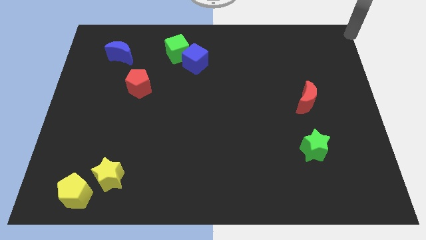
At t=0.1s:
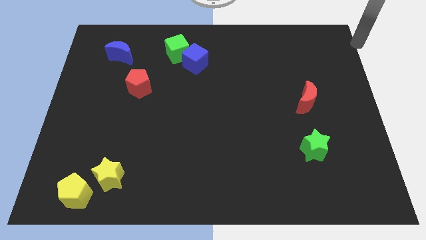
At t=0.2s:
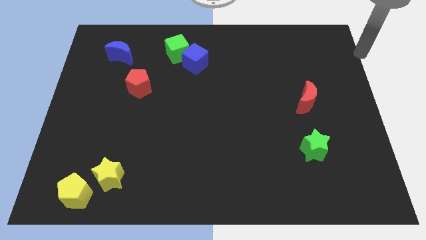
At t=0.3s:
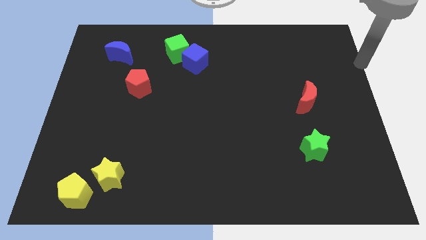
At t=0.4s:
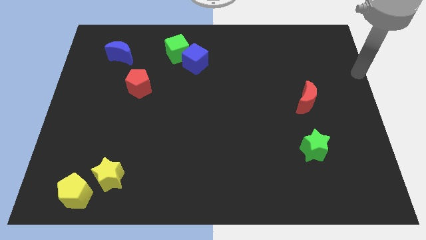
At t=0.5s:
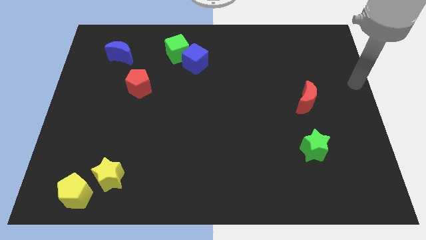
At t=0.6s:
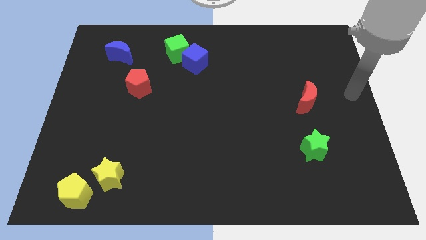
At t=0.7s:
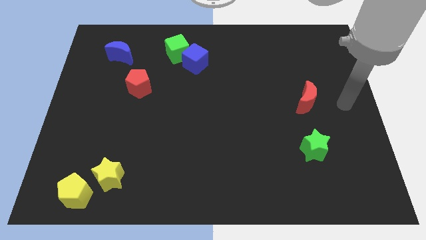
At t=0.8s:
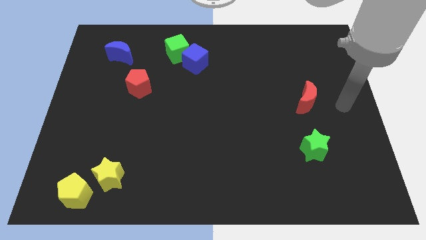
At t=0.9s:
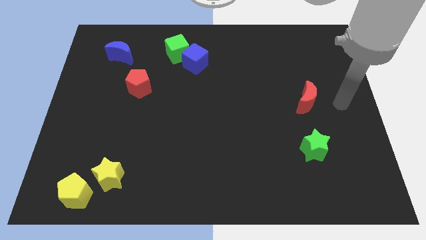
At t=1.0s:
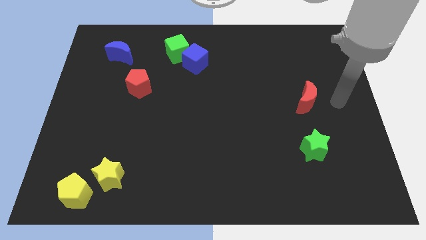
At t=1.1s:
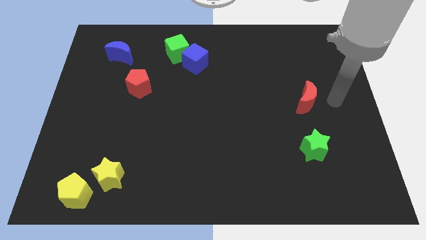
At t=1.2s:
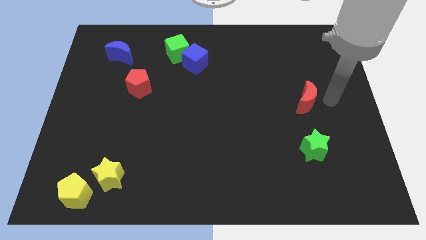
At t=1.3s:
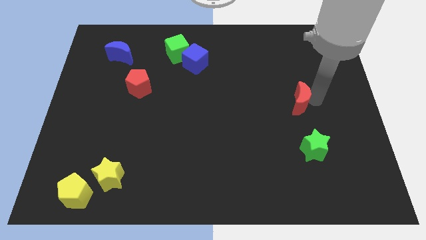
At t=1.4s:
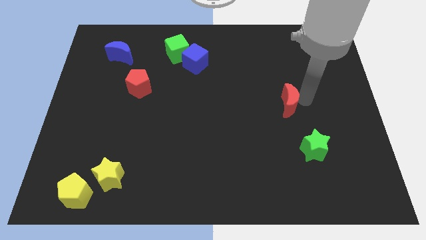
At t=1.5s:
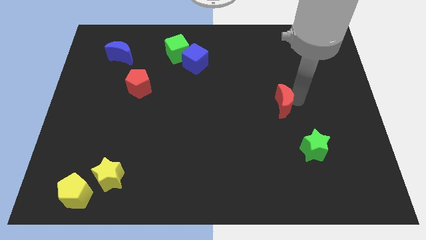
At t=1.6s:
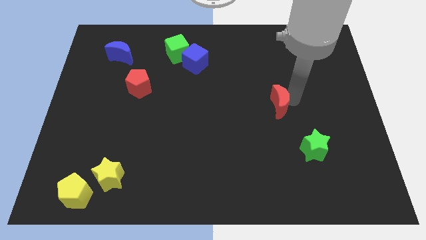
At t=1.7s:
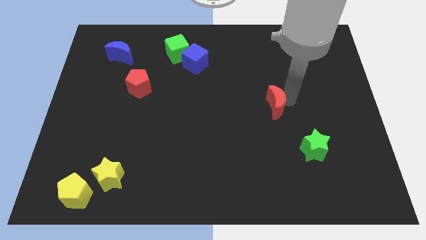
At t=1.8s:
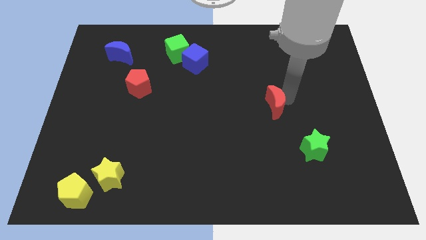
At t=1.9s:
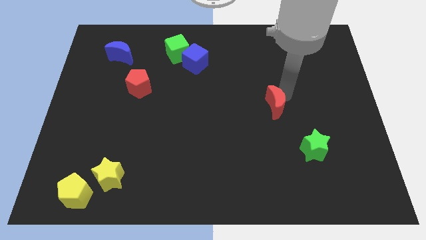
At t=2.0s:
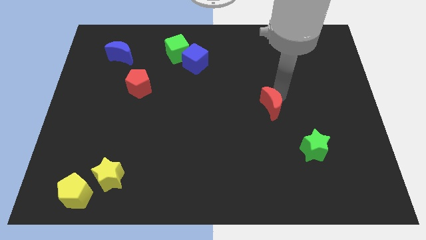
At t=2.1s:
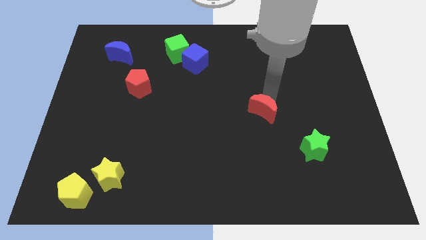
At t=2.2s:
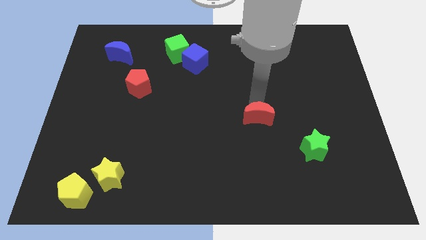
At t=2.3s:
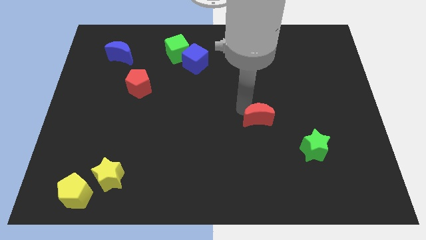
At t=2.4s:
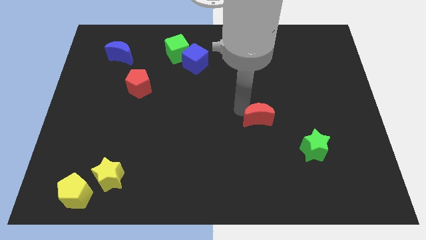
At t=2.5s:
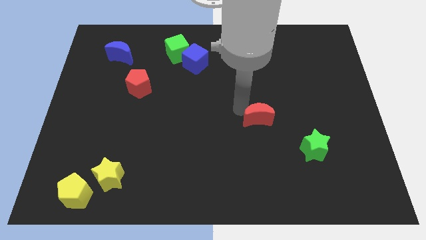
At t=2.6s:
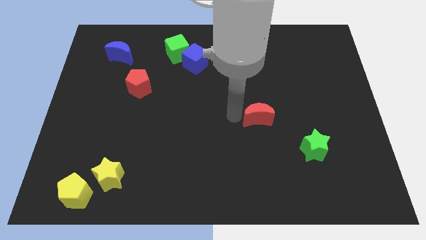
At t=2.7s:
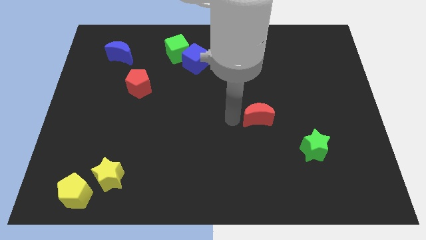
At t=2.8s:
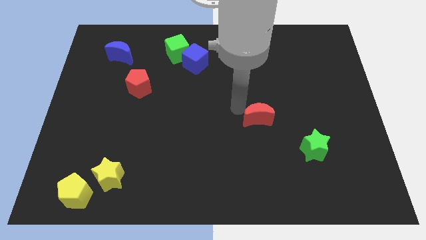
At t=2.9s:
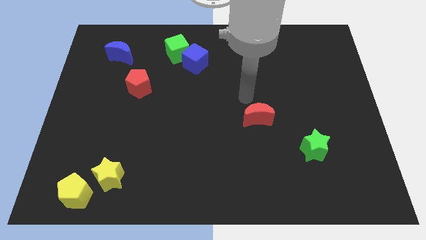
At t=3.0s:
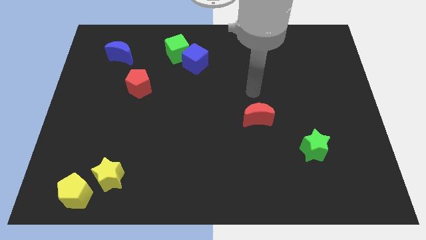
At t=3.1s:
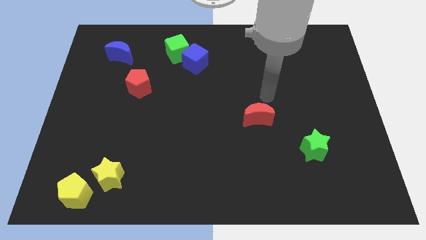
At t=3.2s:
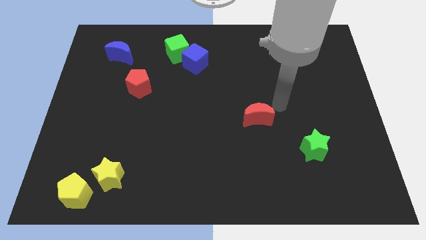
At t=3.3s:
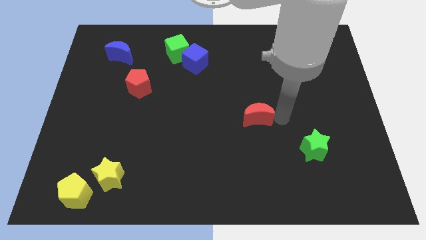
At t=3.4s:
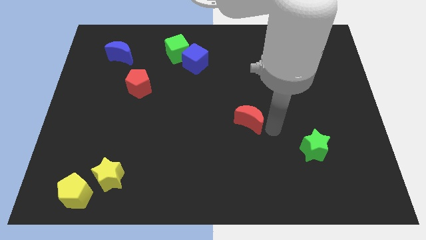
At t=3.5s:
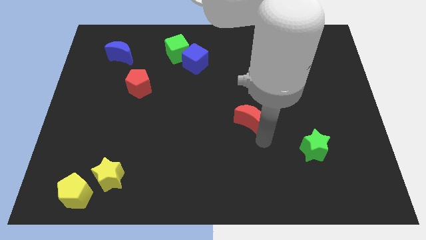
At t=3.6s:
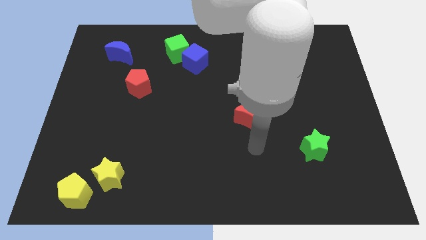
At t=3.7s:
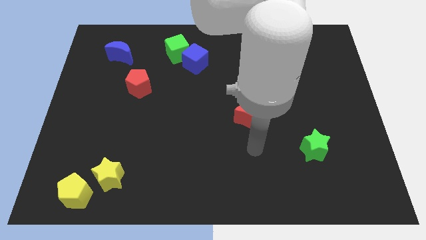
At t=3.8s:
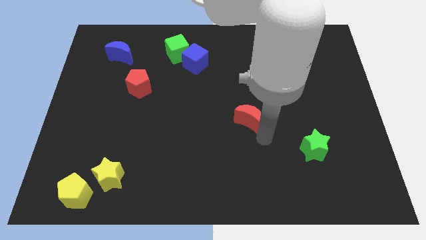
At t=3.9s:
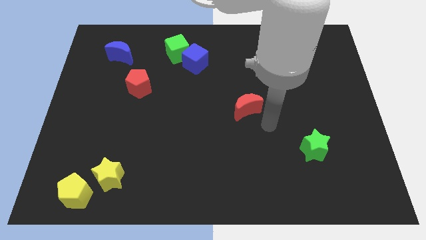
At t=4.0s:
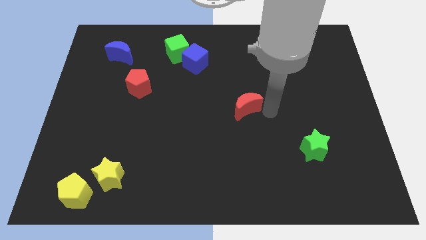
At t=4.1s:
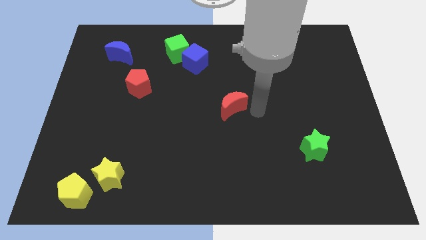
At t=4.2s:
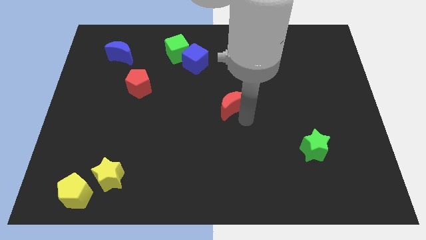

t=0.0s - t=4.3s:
place red moon at the center of the board

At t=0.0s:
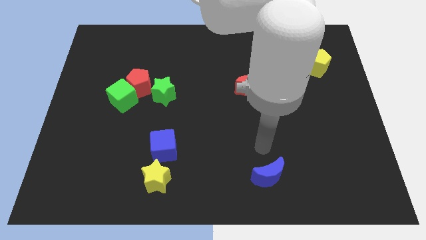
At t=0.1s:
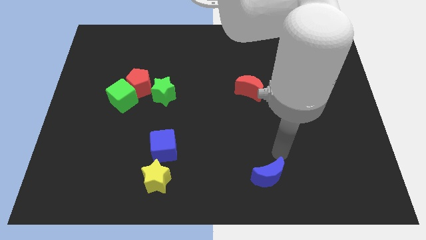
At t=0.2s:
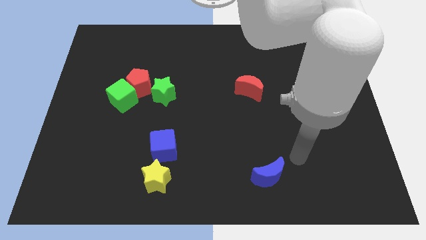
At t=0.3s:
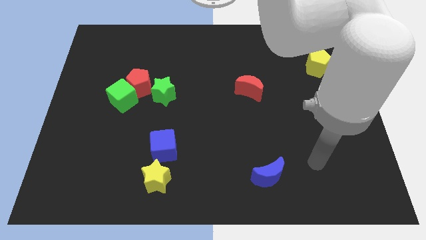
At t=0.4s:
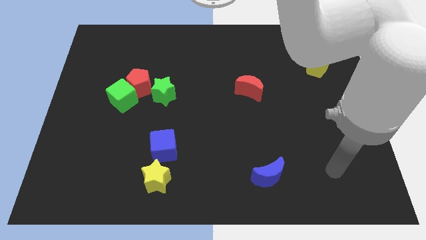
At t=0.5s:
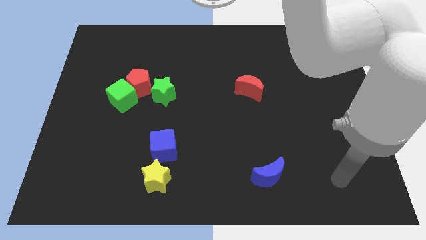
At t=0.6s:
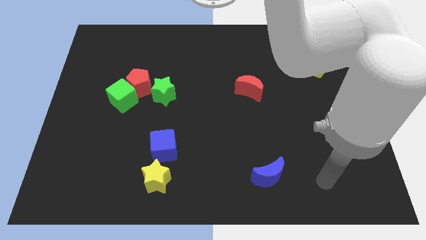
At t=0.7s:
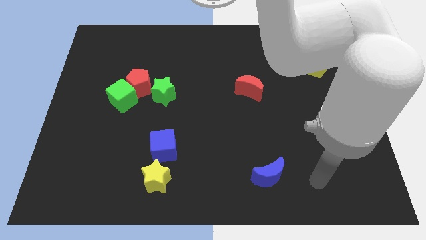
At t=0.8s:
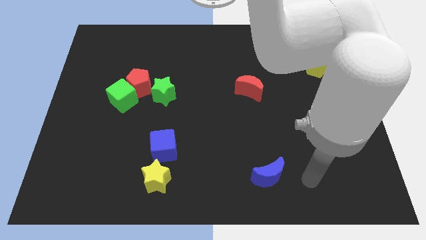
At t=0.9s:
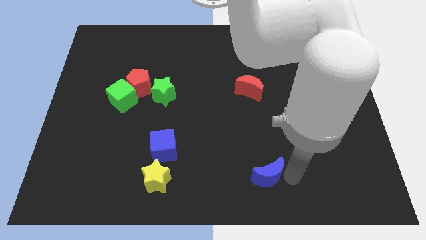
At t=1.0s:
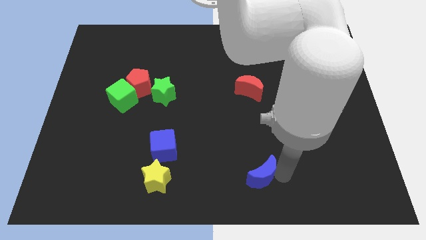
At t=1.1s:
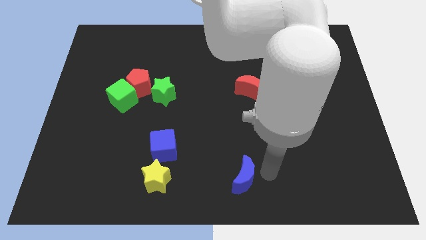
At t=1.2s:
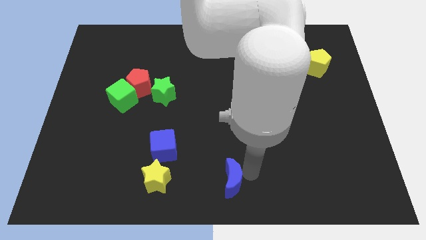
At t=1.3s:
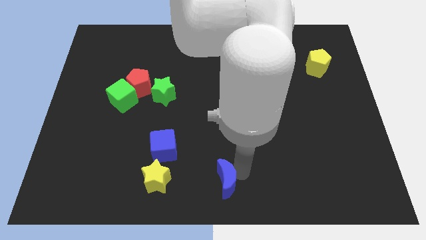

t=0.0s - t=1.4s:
move the blue crescent slightly to the left

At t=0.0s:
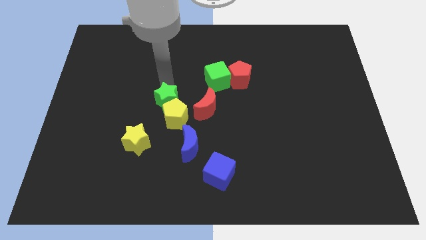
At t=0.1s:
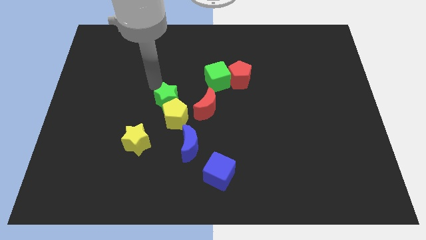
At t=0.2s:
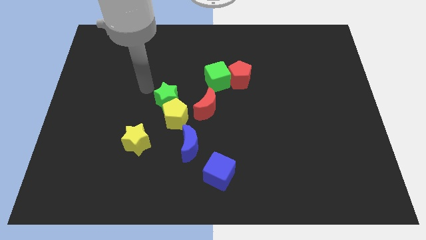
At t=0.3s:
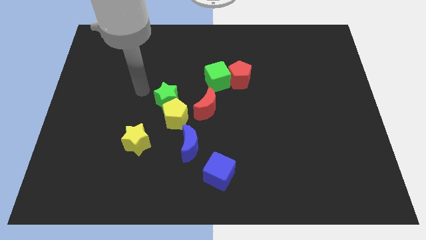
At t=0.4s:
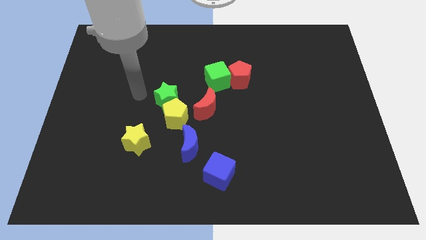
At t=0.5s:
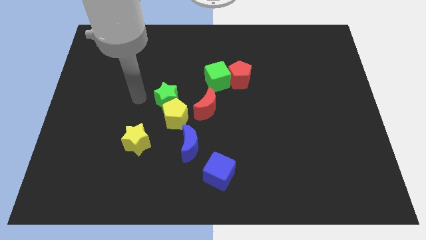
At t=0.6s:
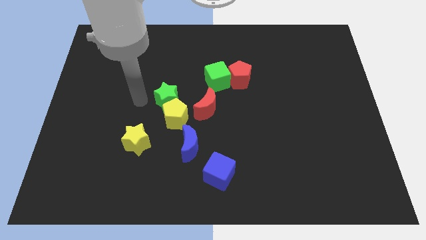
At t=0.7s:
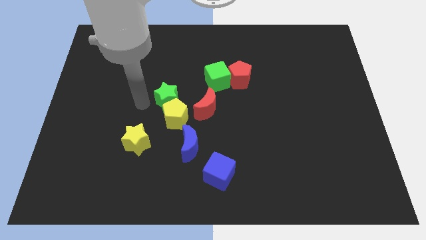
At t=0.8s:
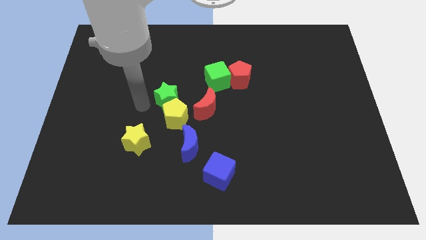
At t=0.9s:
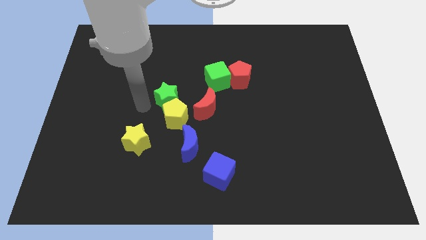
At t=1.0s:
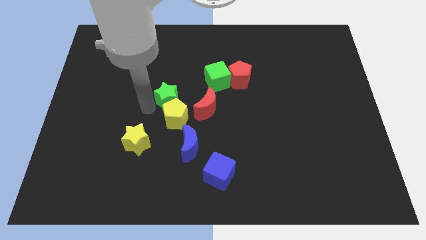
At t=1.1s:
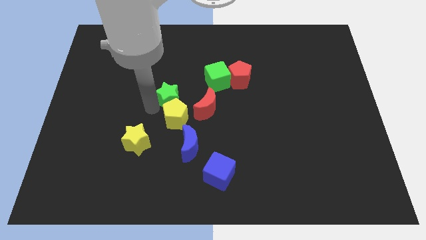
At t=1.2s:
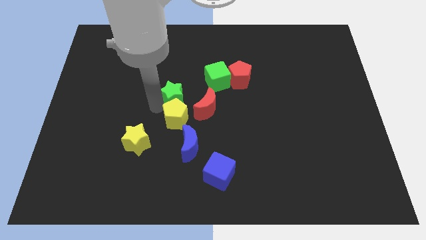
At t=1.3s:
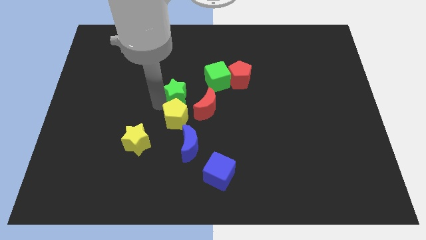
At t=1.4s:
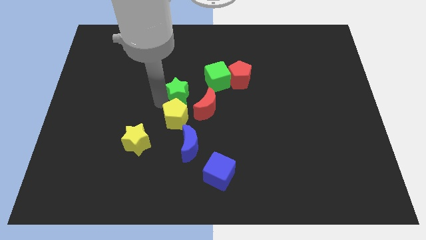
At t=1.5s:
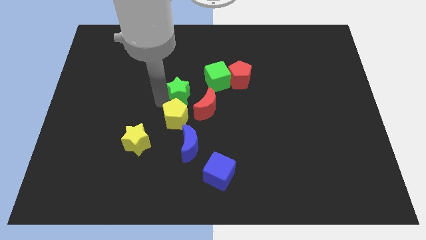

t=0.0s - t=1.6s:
move the green star above the yellow pentagon

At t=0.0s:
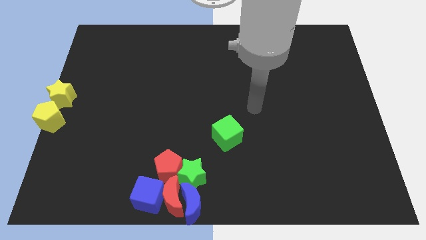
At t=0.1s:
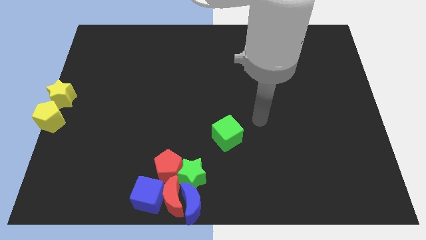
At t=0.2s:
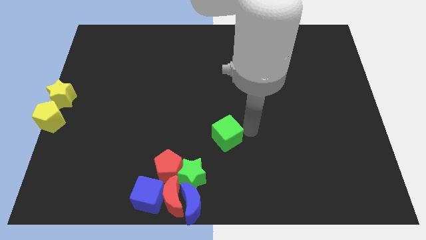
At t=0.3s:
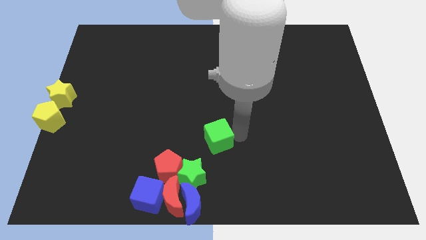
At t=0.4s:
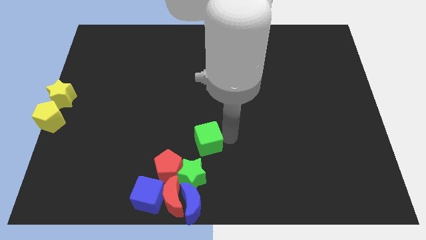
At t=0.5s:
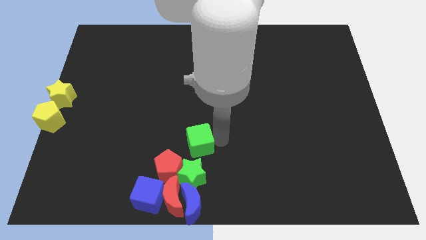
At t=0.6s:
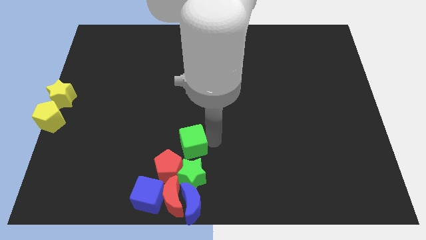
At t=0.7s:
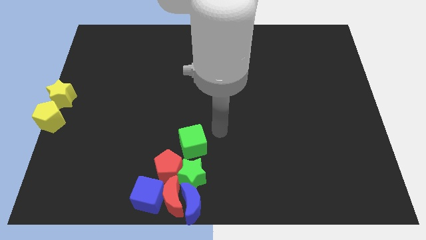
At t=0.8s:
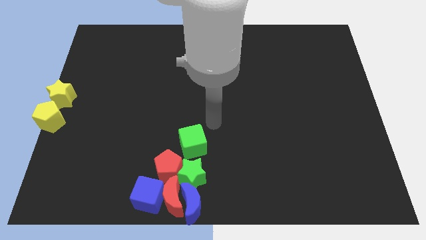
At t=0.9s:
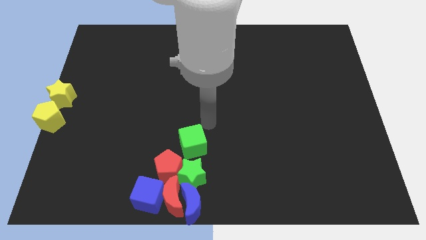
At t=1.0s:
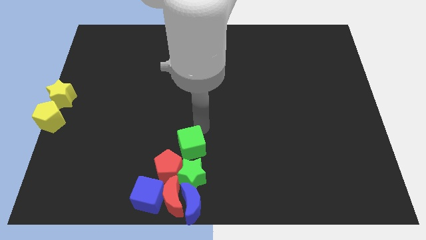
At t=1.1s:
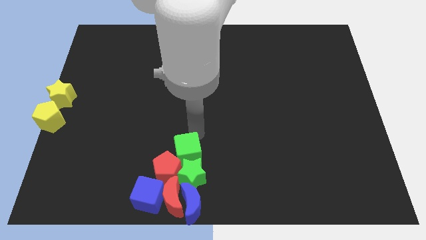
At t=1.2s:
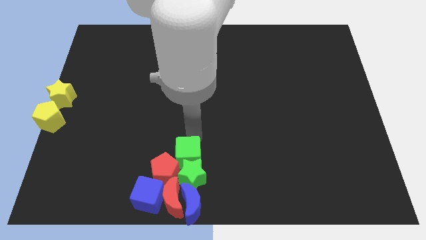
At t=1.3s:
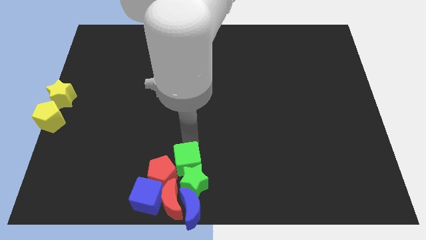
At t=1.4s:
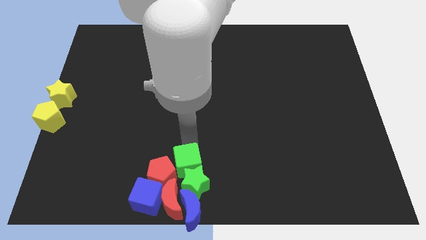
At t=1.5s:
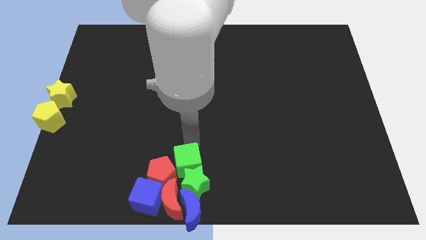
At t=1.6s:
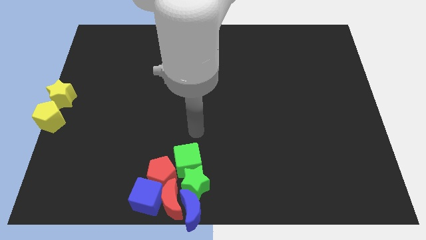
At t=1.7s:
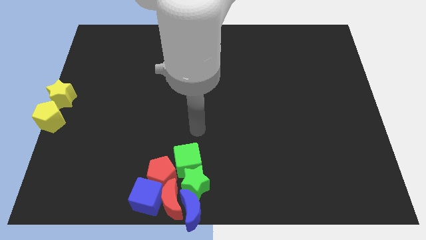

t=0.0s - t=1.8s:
push the green cube into the group of blocks
